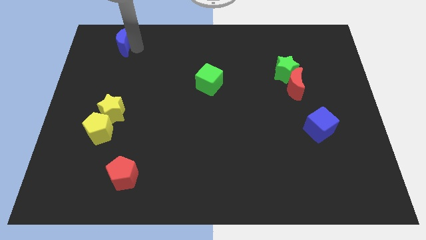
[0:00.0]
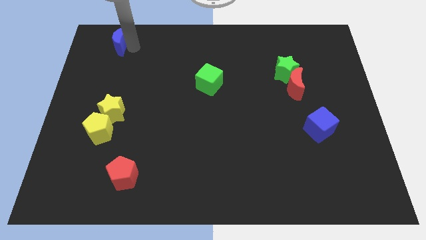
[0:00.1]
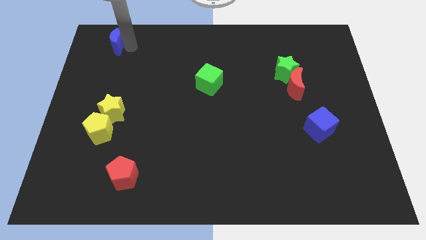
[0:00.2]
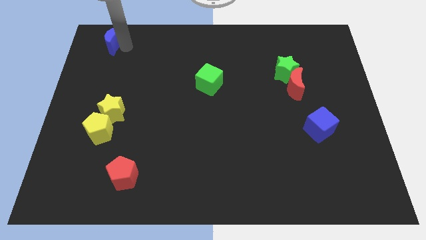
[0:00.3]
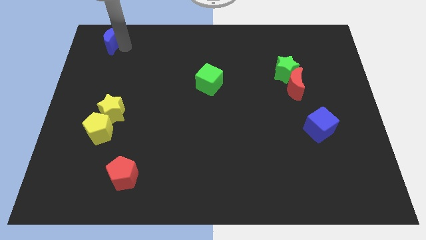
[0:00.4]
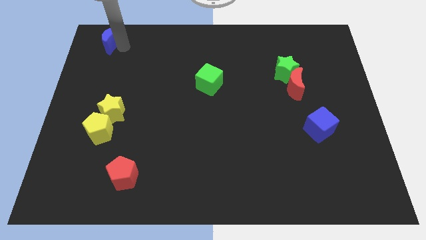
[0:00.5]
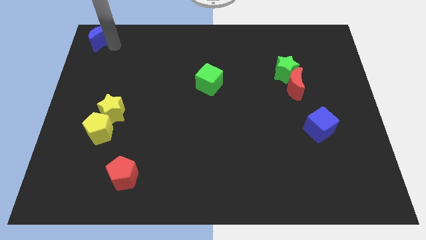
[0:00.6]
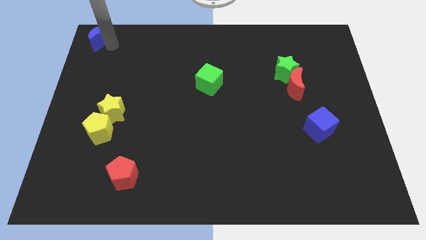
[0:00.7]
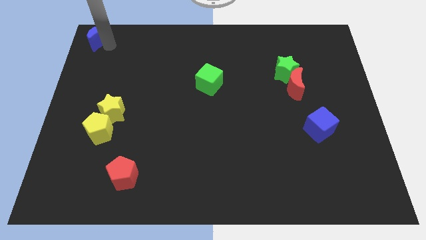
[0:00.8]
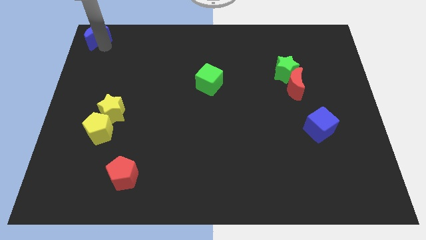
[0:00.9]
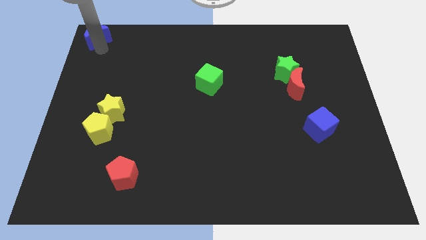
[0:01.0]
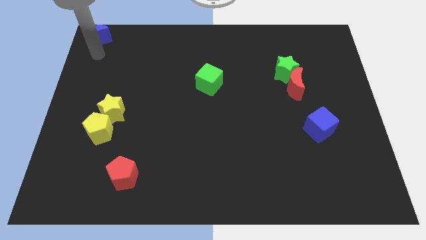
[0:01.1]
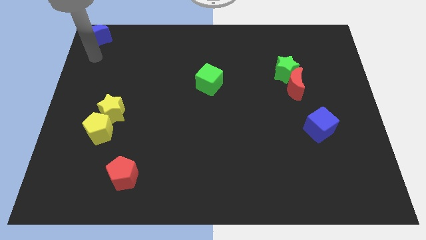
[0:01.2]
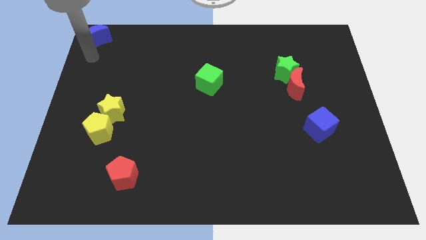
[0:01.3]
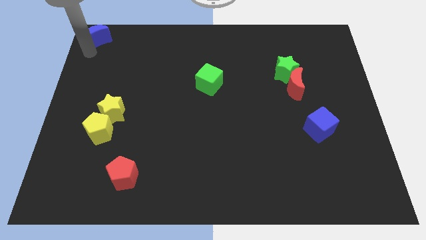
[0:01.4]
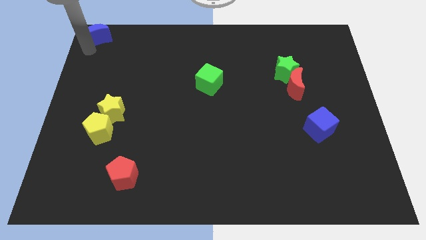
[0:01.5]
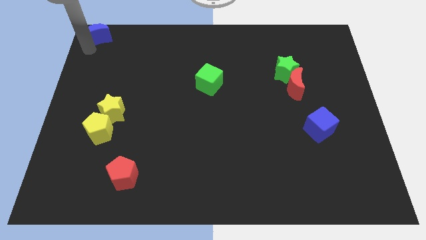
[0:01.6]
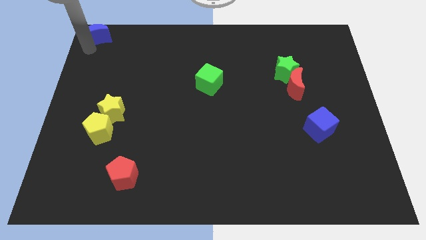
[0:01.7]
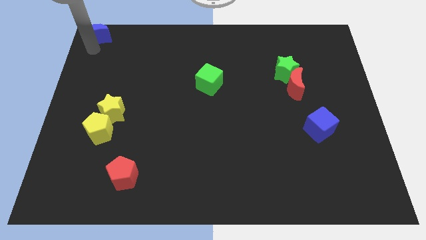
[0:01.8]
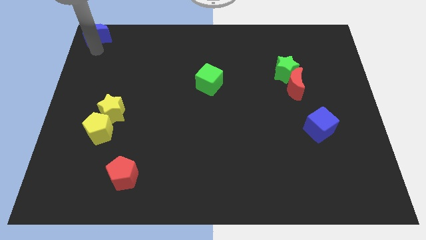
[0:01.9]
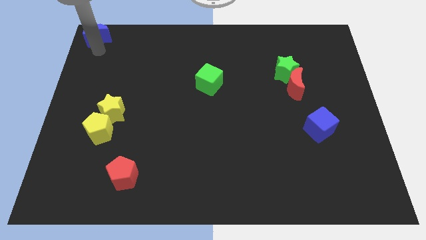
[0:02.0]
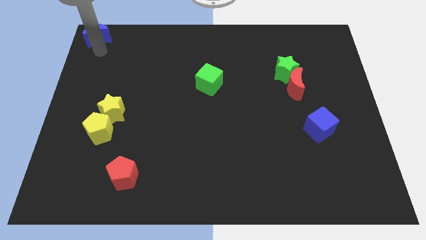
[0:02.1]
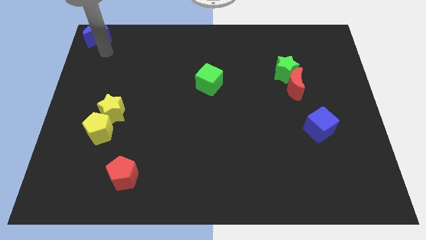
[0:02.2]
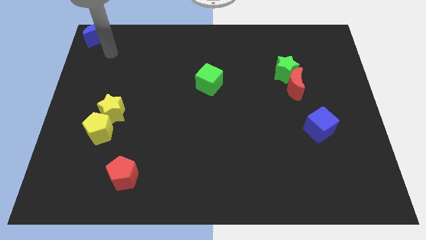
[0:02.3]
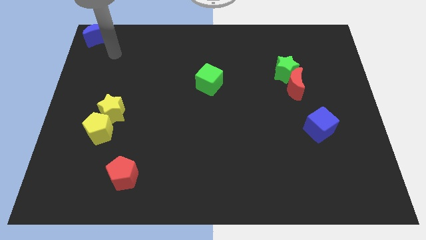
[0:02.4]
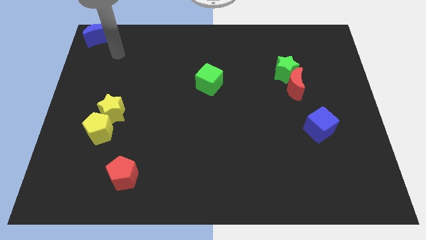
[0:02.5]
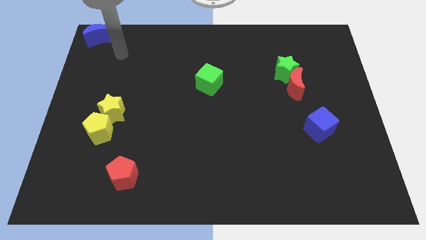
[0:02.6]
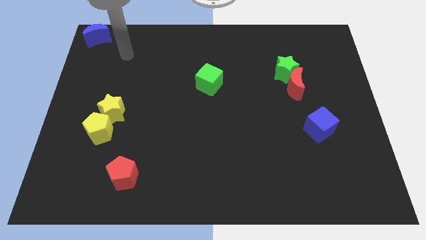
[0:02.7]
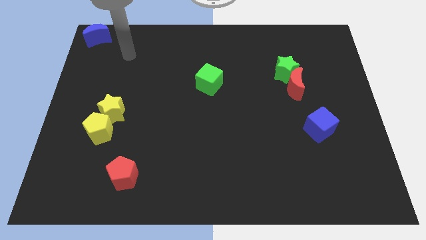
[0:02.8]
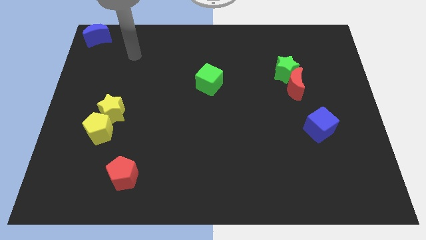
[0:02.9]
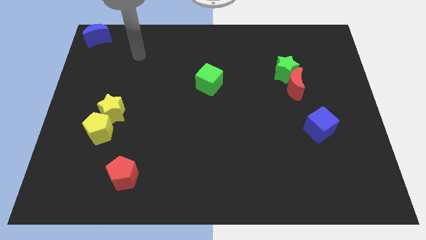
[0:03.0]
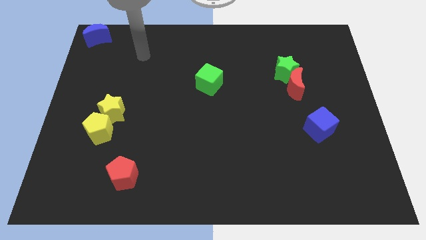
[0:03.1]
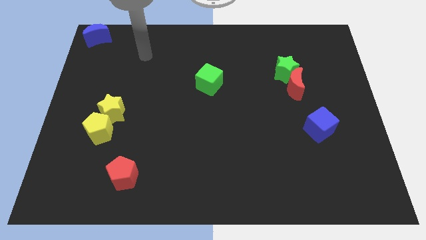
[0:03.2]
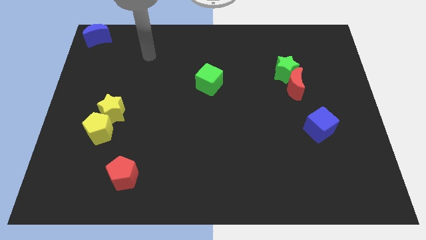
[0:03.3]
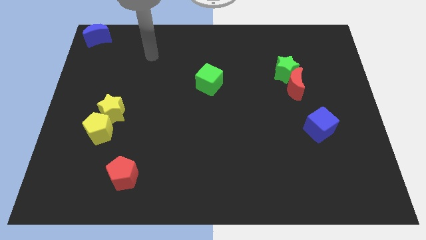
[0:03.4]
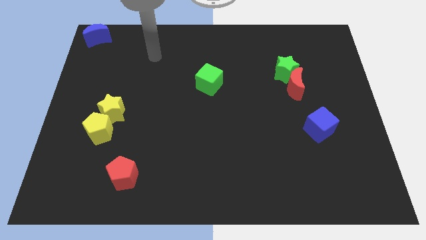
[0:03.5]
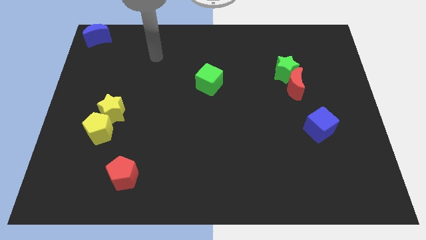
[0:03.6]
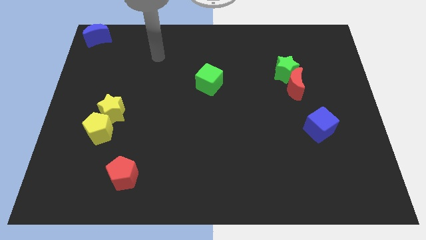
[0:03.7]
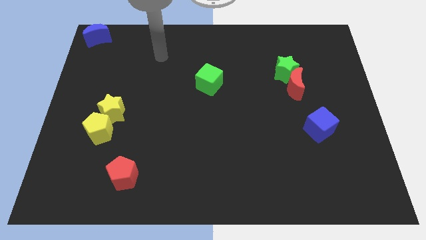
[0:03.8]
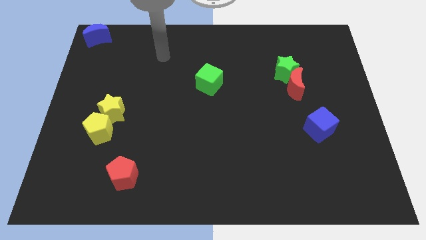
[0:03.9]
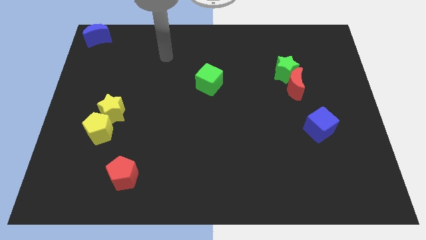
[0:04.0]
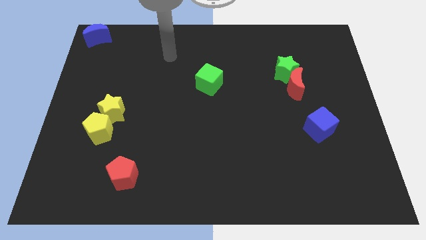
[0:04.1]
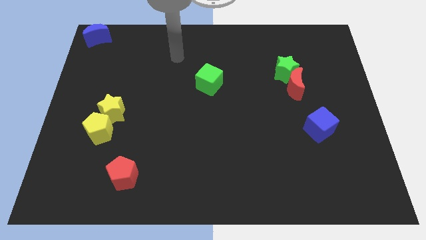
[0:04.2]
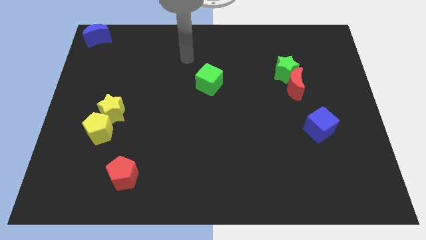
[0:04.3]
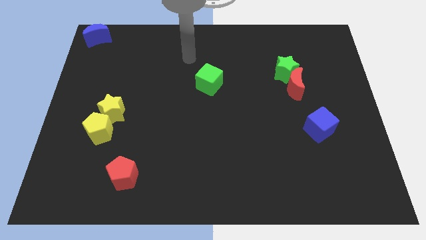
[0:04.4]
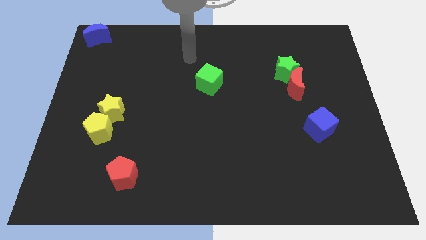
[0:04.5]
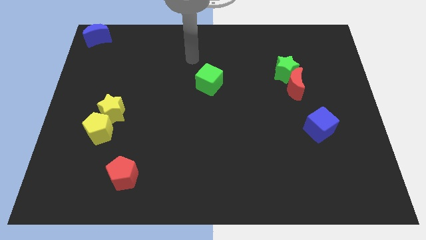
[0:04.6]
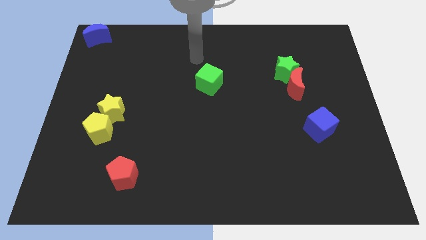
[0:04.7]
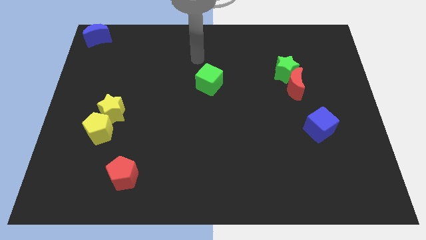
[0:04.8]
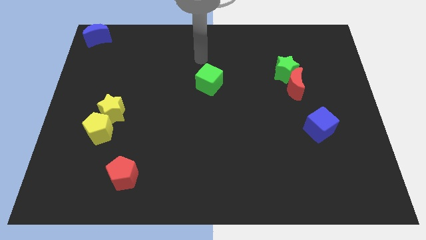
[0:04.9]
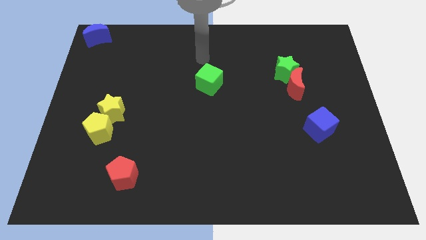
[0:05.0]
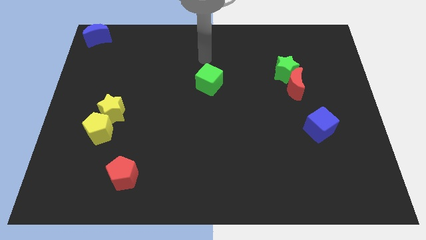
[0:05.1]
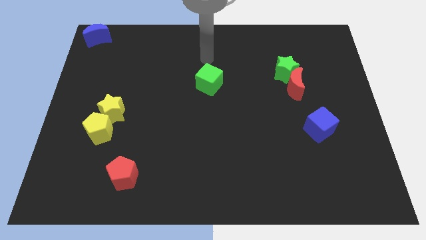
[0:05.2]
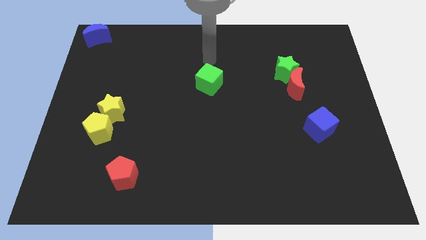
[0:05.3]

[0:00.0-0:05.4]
move the blue moon to the top left corner of the board

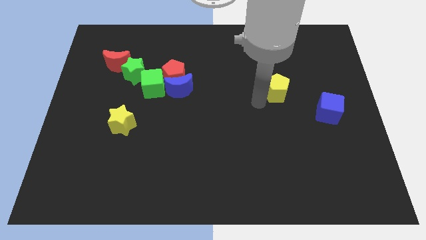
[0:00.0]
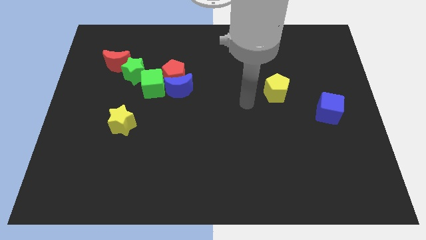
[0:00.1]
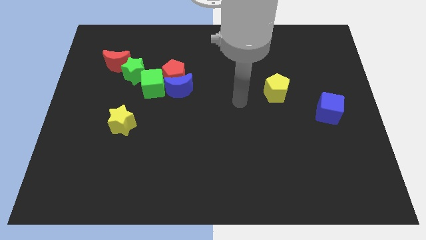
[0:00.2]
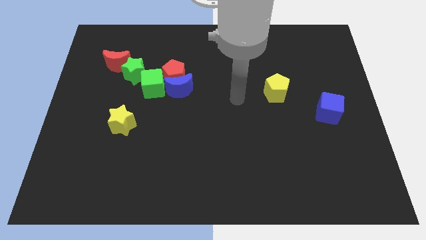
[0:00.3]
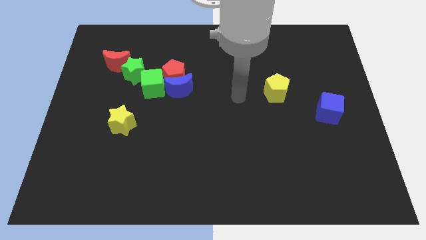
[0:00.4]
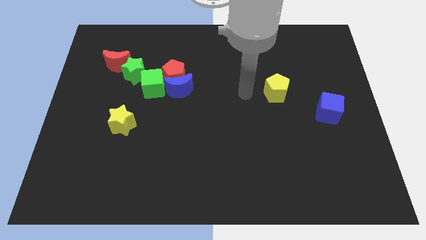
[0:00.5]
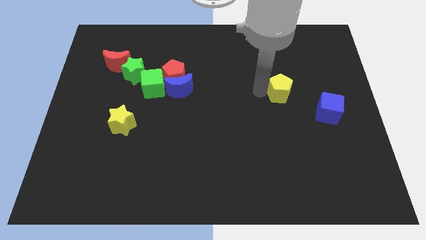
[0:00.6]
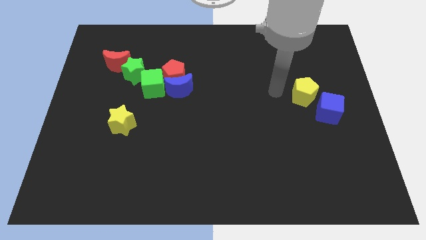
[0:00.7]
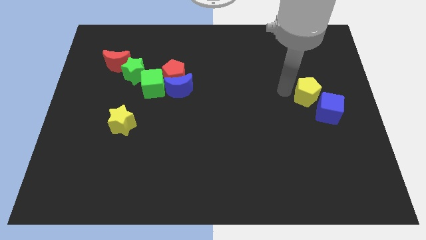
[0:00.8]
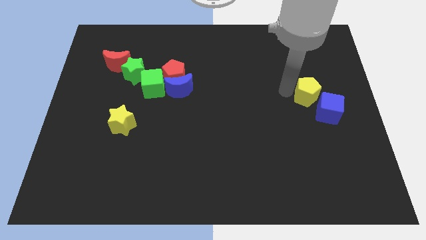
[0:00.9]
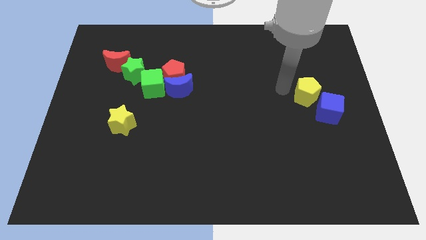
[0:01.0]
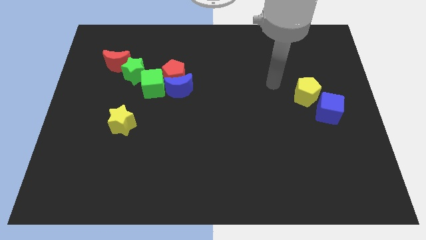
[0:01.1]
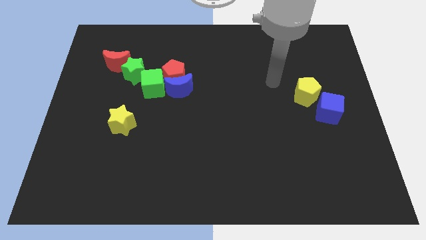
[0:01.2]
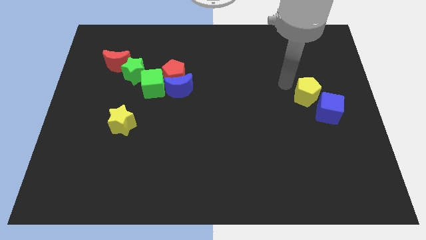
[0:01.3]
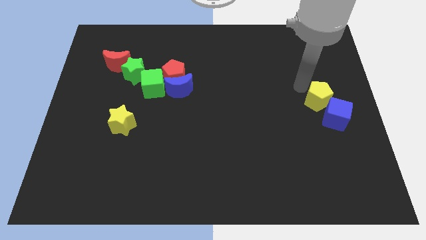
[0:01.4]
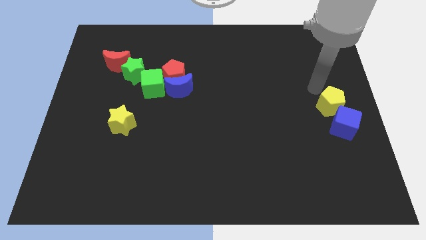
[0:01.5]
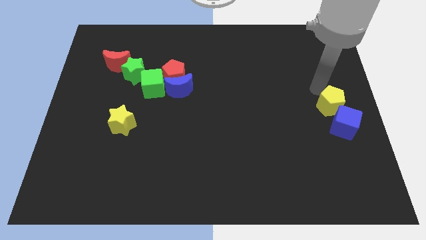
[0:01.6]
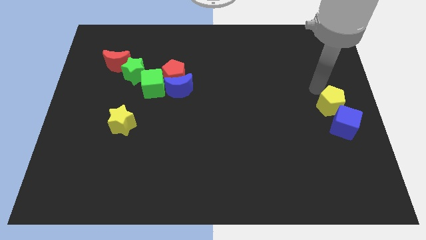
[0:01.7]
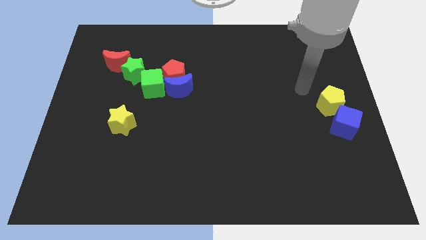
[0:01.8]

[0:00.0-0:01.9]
push the yellow pentagon into the blue cube

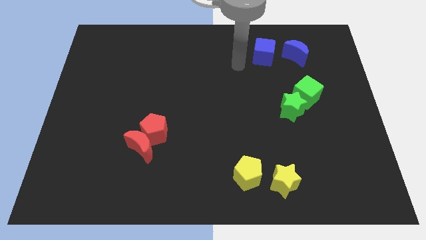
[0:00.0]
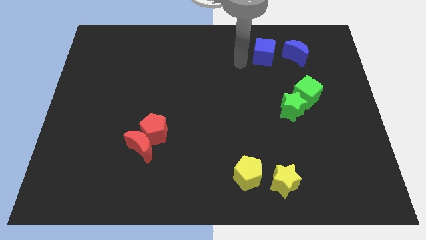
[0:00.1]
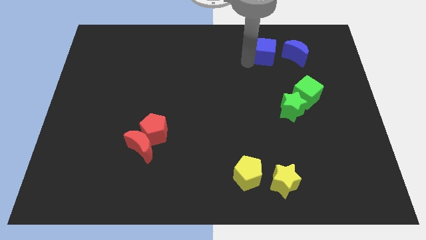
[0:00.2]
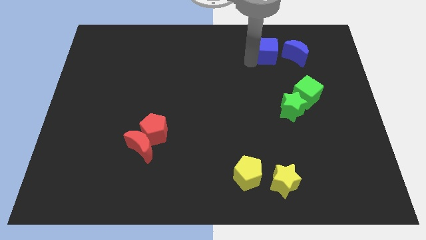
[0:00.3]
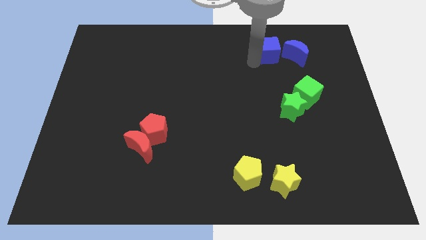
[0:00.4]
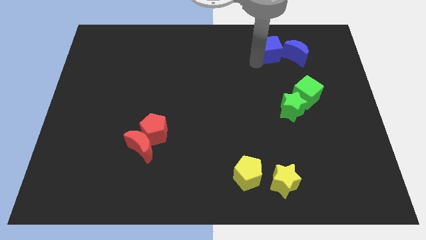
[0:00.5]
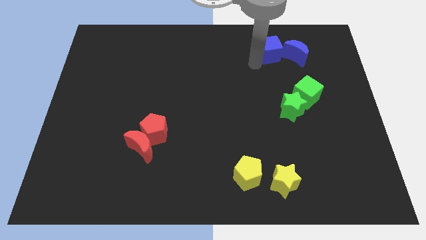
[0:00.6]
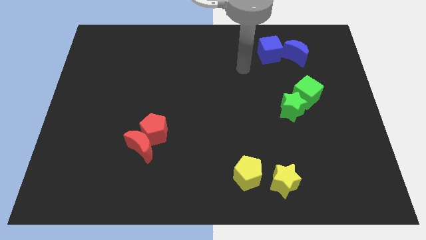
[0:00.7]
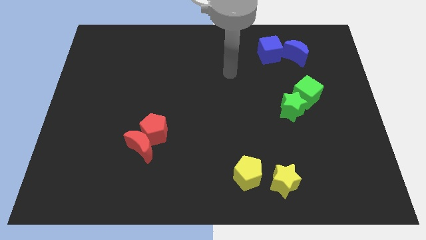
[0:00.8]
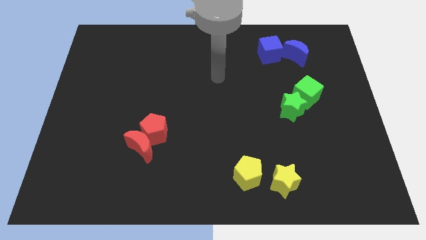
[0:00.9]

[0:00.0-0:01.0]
push the blue cube into the blue moon

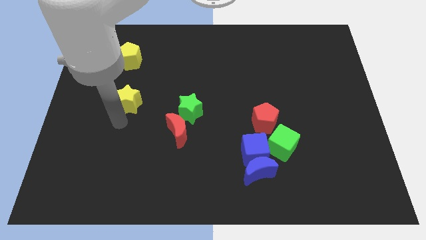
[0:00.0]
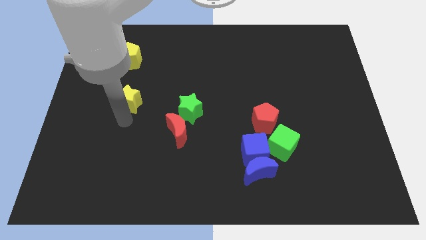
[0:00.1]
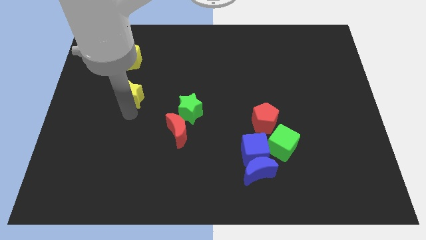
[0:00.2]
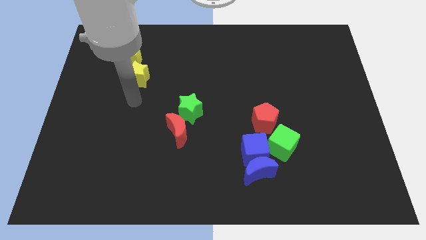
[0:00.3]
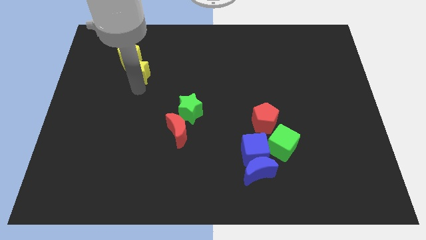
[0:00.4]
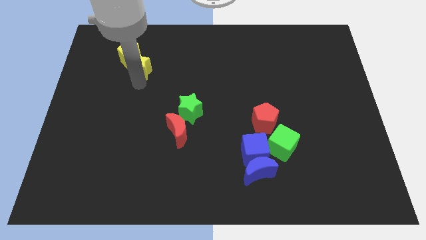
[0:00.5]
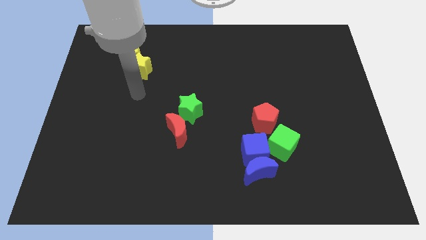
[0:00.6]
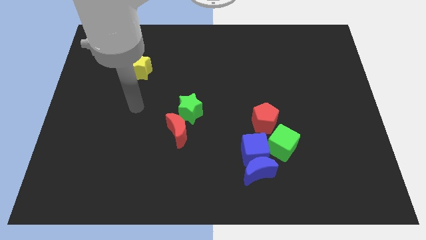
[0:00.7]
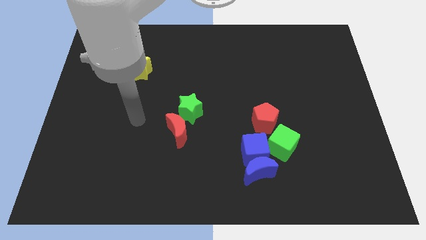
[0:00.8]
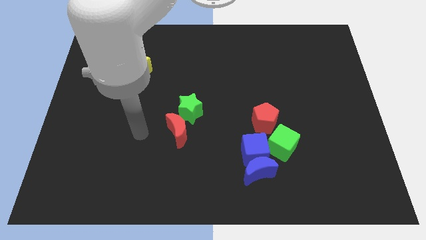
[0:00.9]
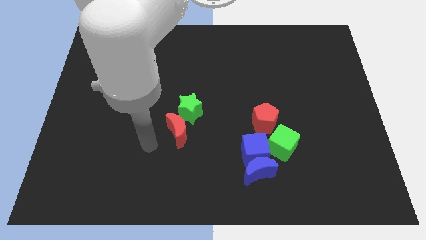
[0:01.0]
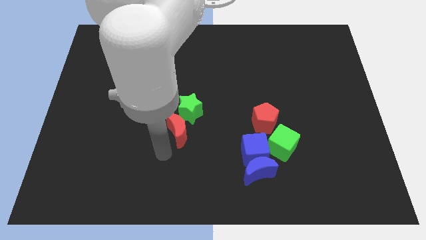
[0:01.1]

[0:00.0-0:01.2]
push the yellow star into the yellow pentagon
